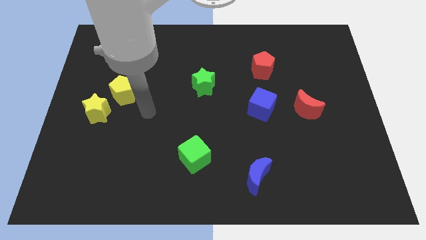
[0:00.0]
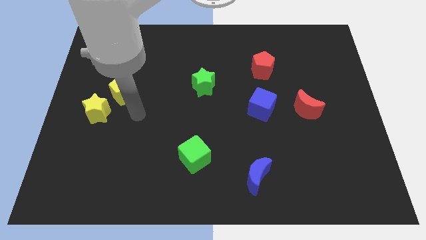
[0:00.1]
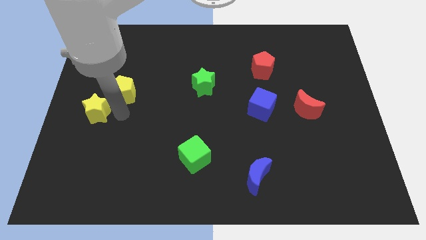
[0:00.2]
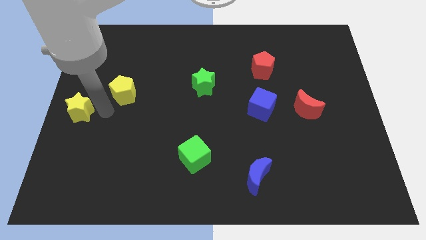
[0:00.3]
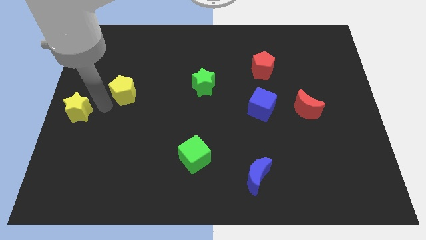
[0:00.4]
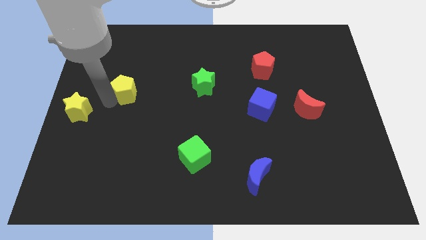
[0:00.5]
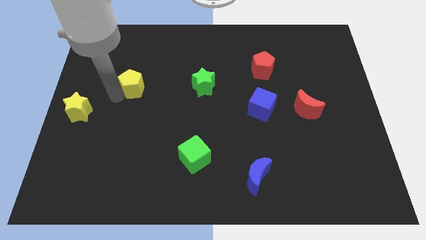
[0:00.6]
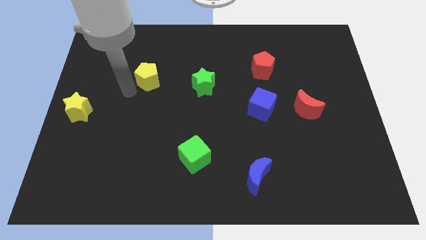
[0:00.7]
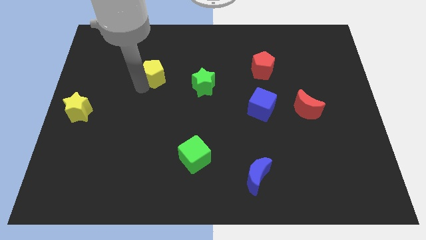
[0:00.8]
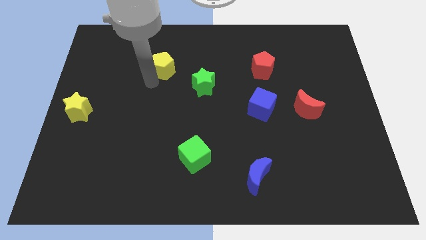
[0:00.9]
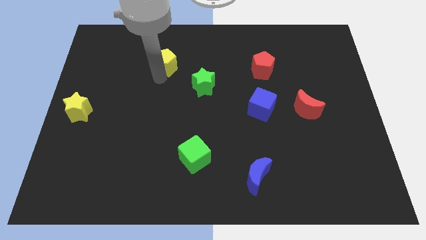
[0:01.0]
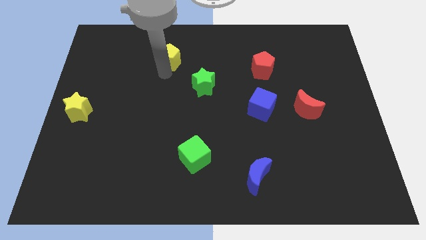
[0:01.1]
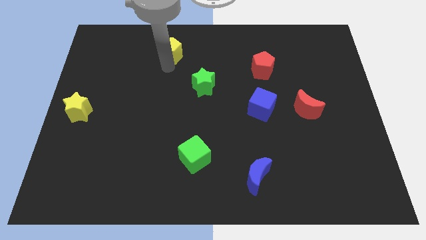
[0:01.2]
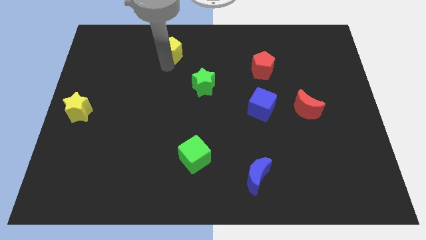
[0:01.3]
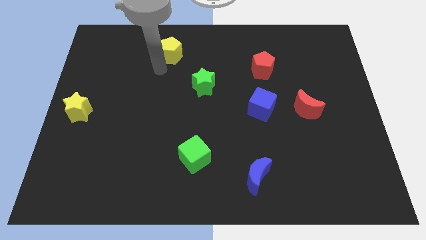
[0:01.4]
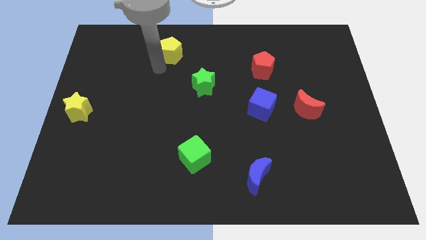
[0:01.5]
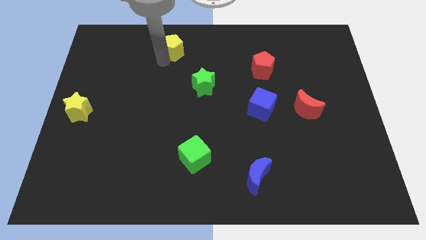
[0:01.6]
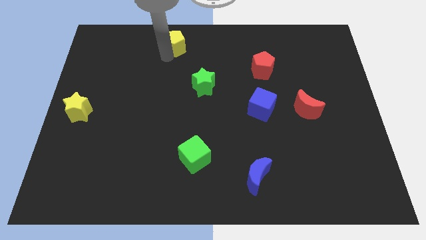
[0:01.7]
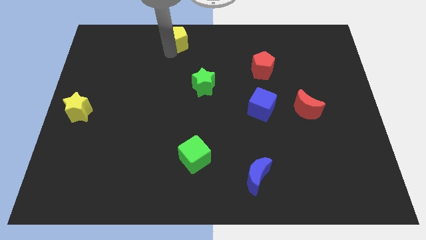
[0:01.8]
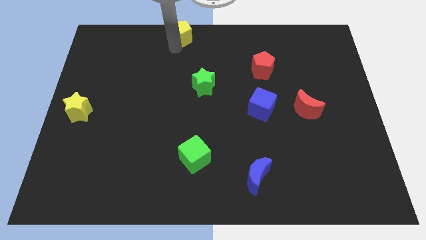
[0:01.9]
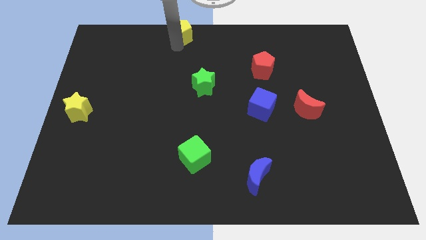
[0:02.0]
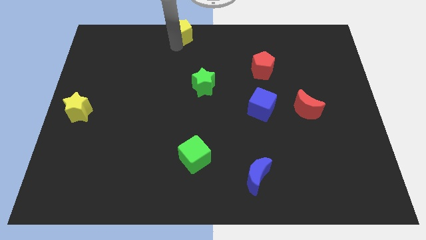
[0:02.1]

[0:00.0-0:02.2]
place the yellow pentagon on the top middle of the board

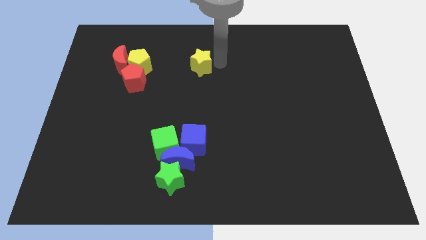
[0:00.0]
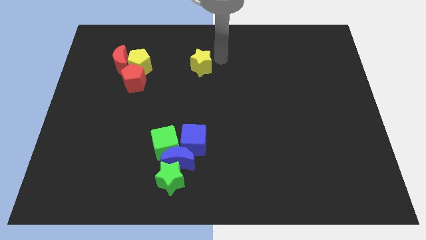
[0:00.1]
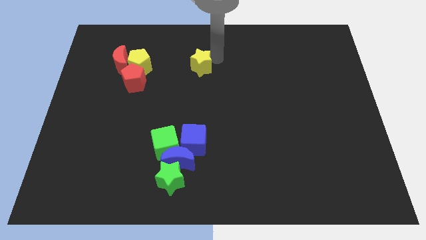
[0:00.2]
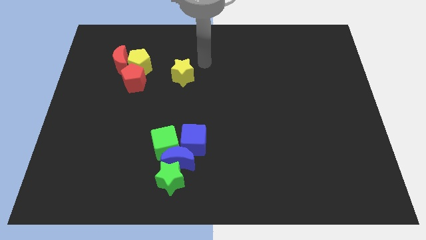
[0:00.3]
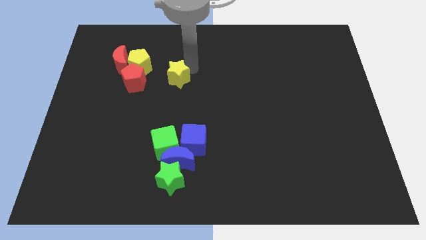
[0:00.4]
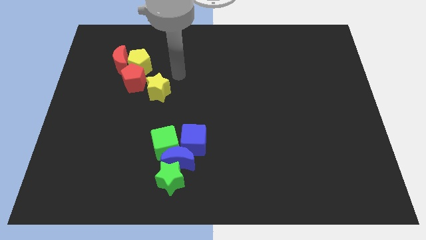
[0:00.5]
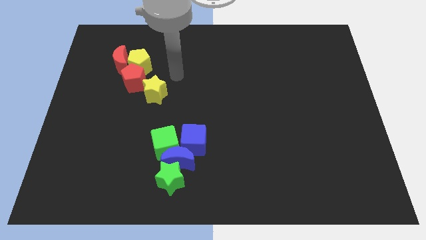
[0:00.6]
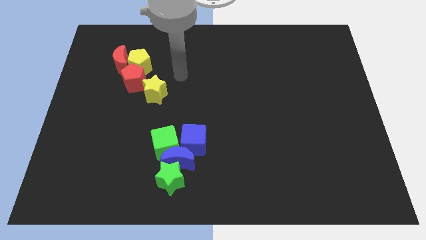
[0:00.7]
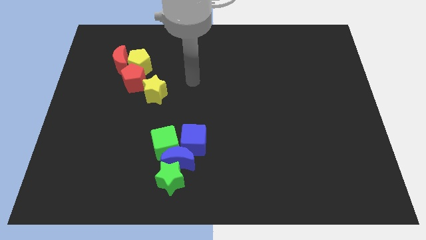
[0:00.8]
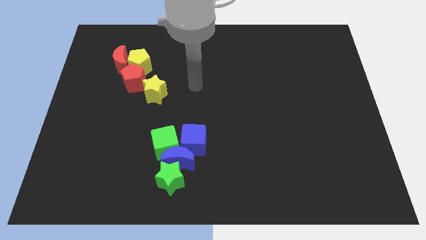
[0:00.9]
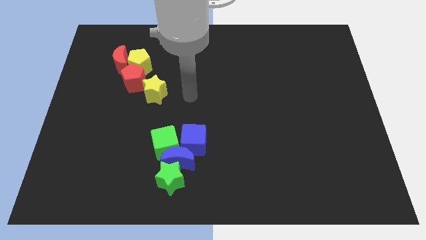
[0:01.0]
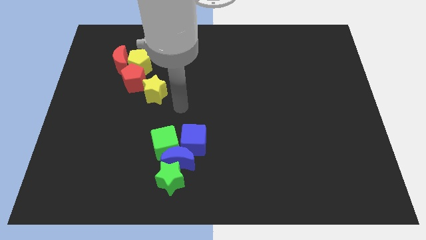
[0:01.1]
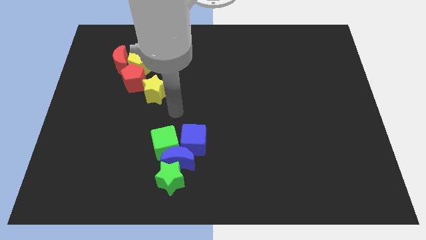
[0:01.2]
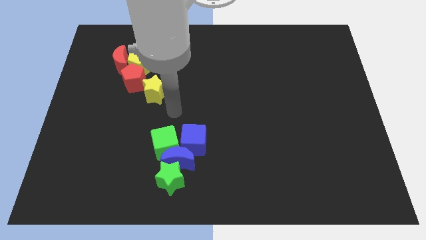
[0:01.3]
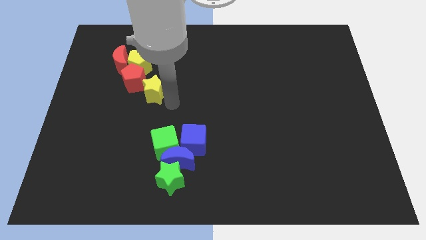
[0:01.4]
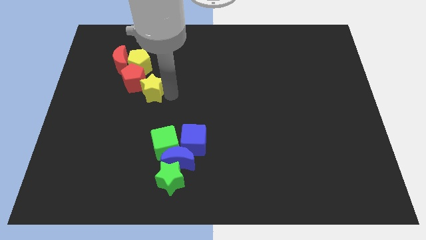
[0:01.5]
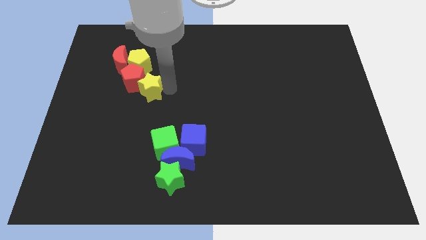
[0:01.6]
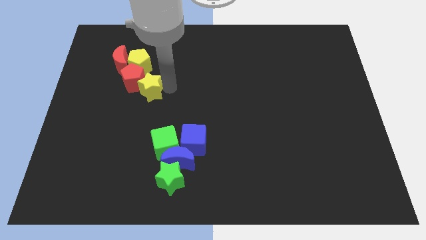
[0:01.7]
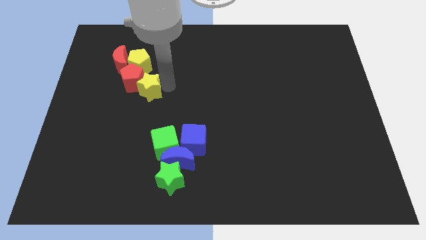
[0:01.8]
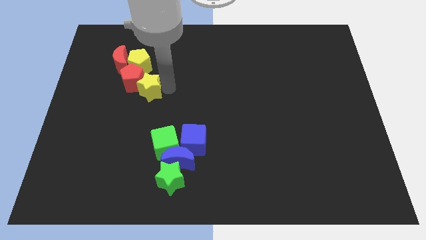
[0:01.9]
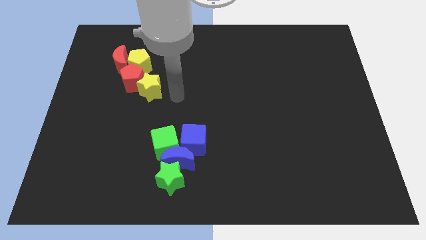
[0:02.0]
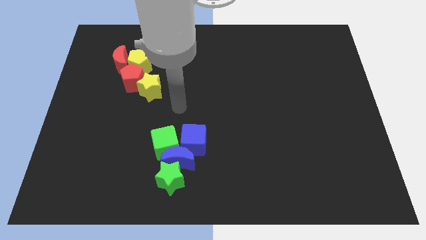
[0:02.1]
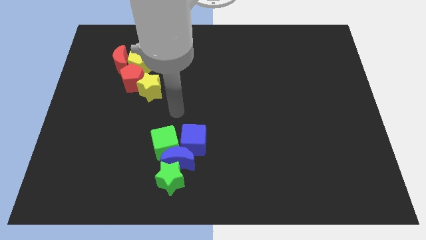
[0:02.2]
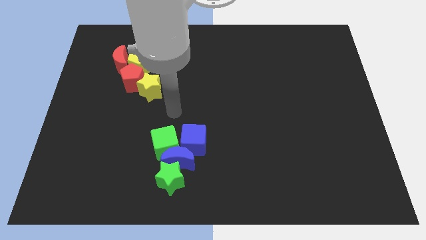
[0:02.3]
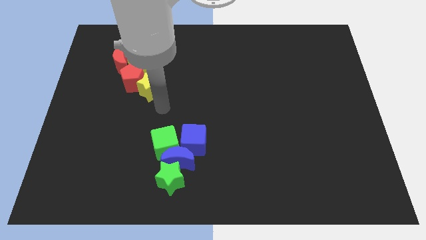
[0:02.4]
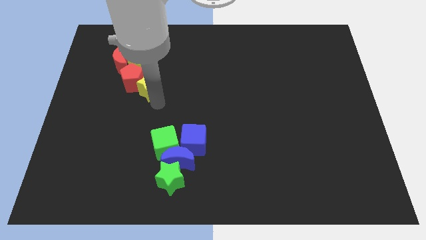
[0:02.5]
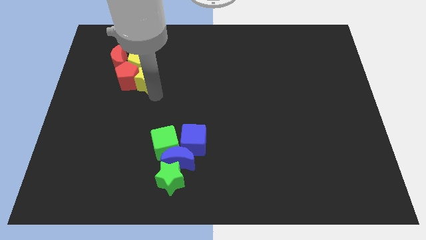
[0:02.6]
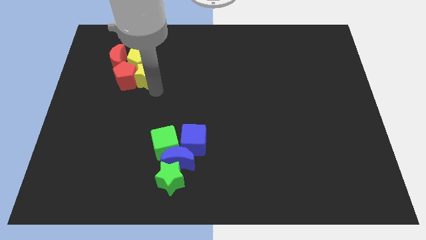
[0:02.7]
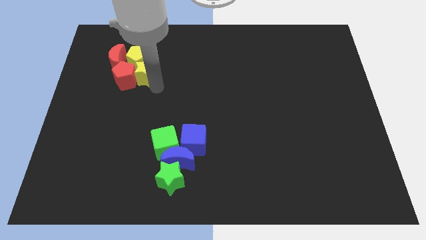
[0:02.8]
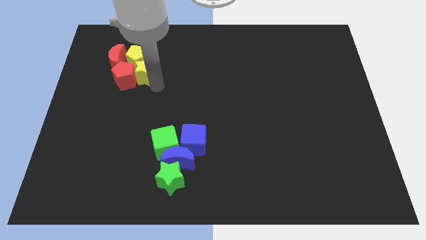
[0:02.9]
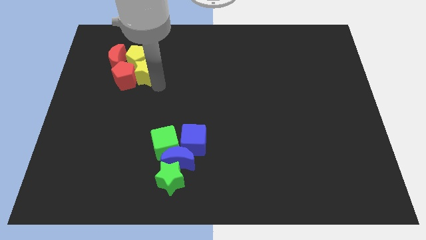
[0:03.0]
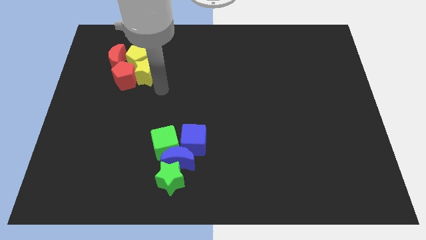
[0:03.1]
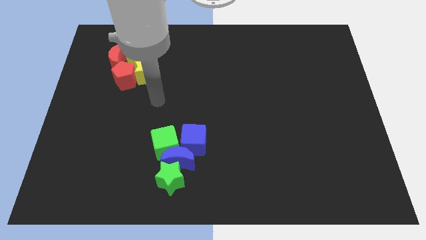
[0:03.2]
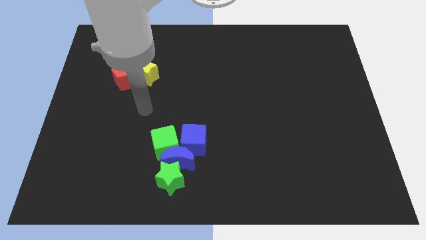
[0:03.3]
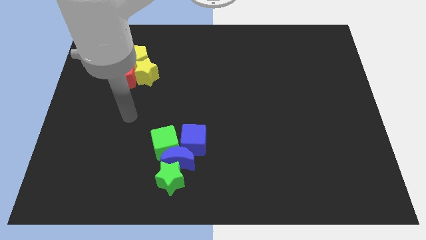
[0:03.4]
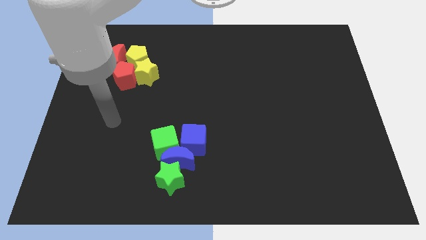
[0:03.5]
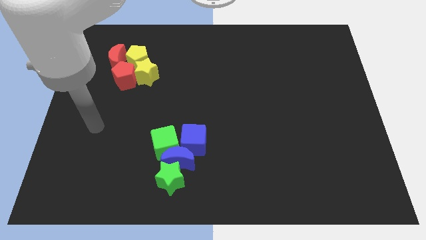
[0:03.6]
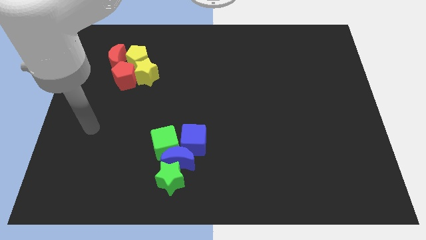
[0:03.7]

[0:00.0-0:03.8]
push yellow star in to yellow pentagon

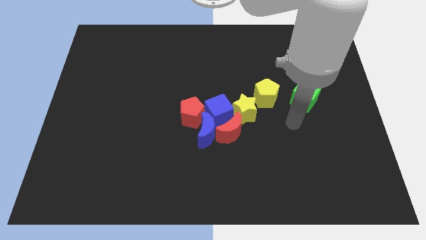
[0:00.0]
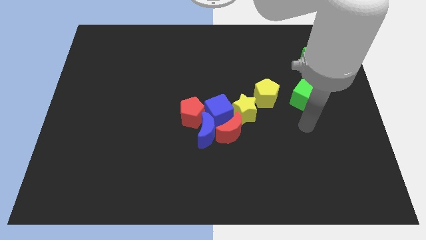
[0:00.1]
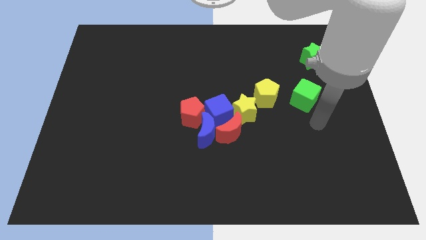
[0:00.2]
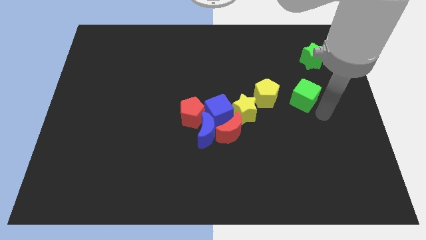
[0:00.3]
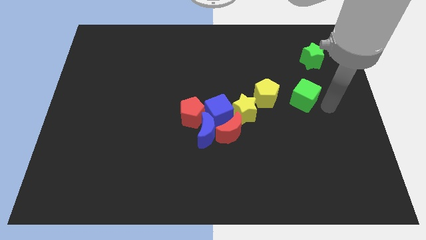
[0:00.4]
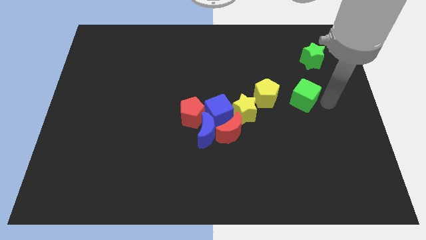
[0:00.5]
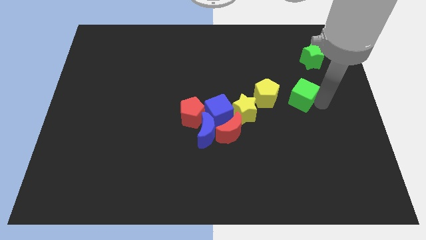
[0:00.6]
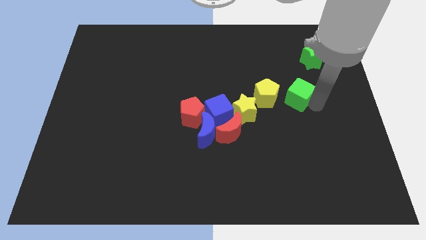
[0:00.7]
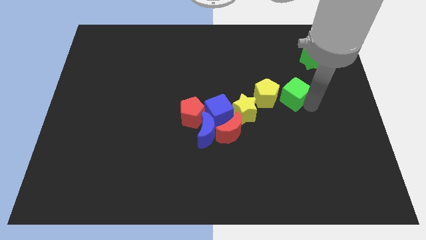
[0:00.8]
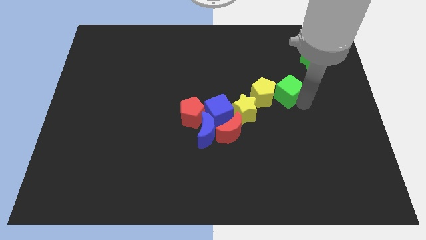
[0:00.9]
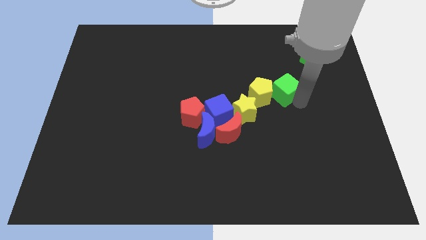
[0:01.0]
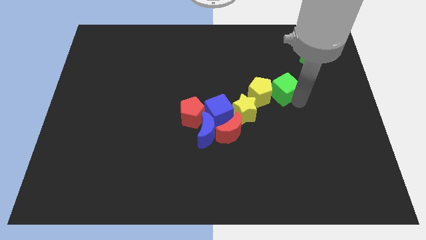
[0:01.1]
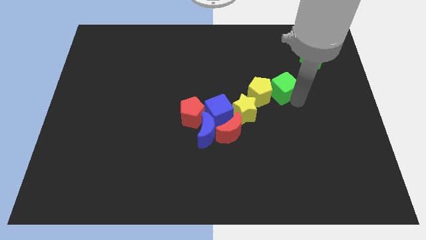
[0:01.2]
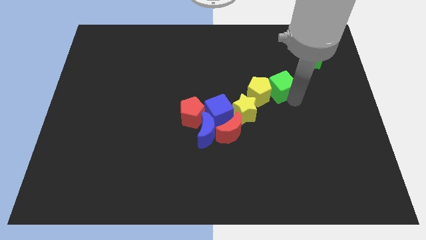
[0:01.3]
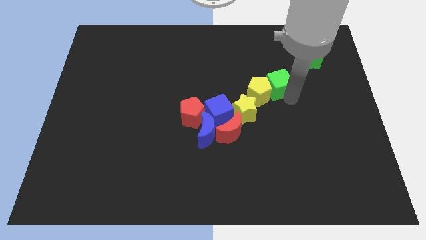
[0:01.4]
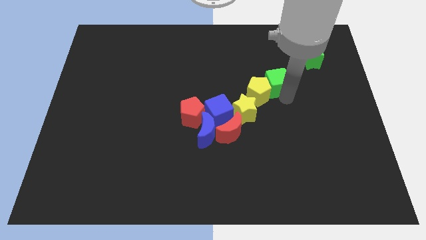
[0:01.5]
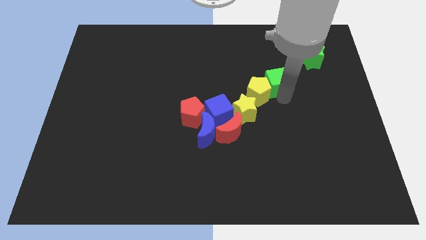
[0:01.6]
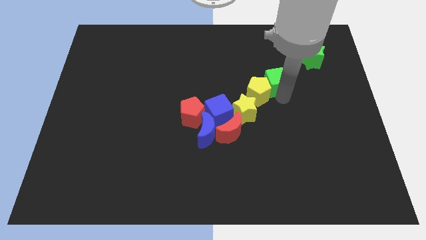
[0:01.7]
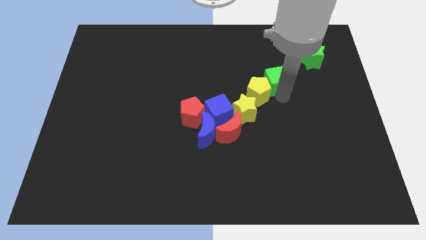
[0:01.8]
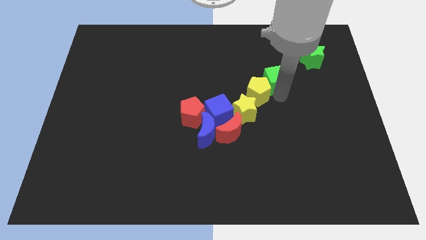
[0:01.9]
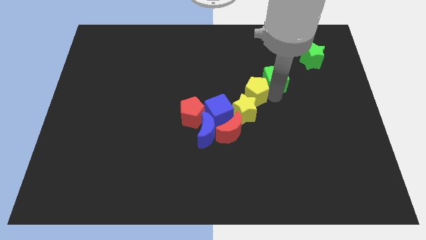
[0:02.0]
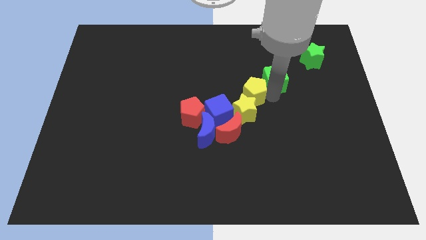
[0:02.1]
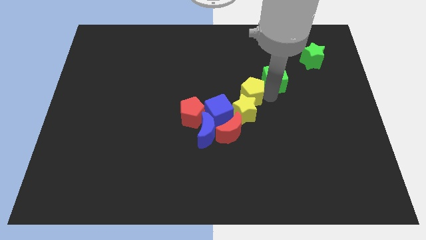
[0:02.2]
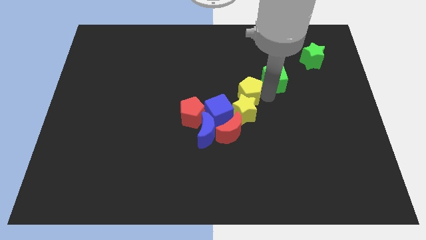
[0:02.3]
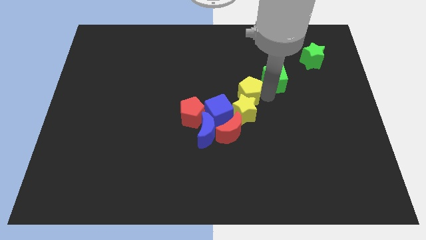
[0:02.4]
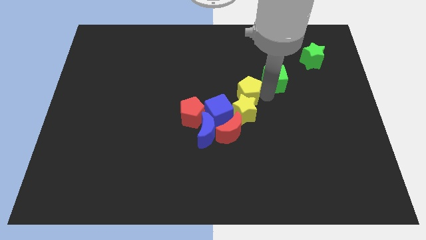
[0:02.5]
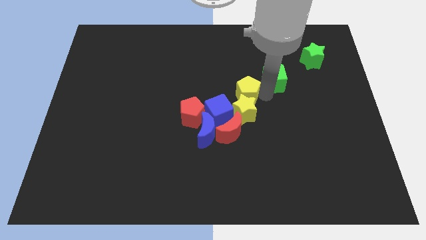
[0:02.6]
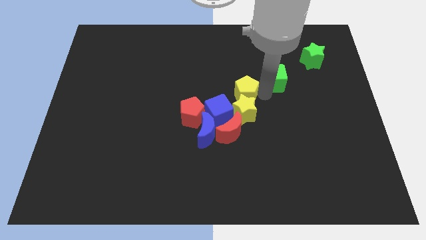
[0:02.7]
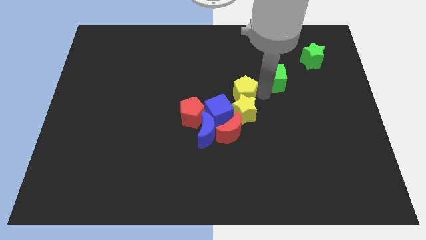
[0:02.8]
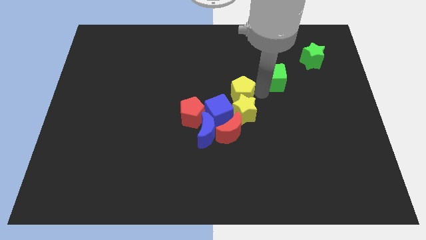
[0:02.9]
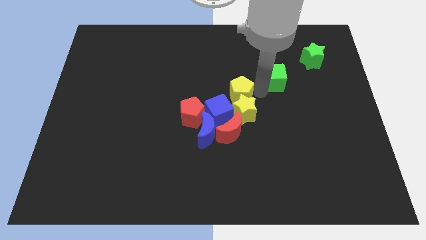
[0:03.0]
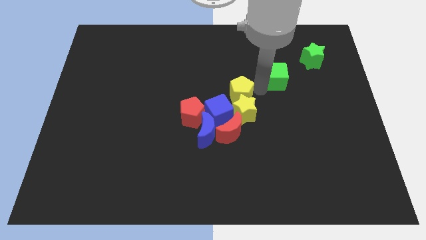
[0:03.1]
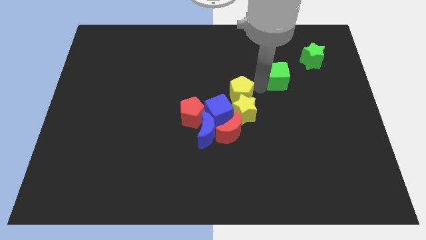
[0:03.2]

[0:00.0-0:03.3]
push yellow pentagon above yellow star
